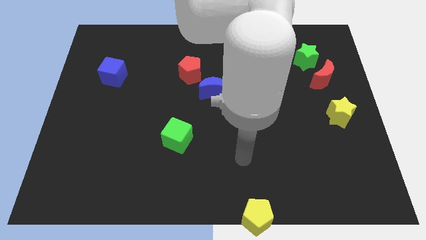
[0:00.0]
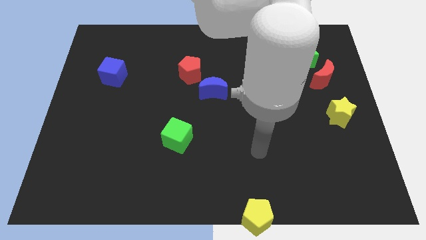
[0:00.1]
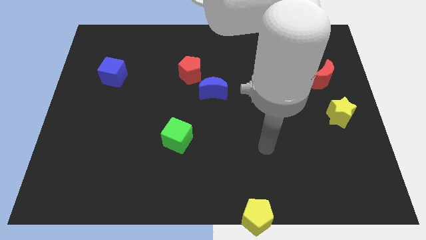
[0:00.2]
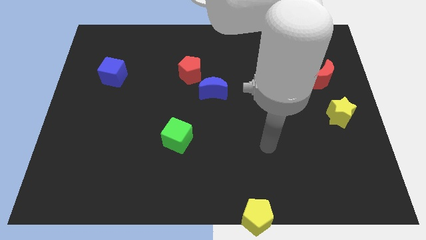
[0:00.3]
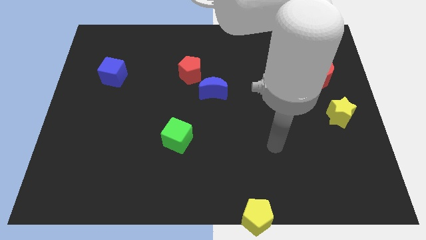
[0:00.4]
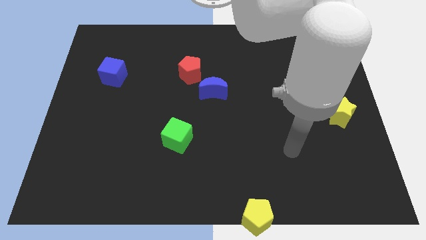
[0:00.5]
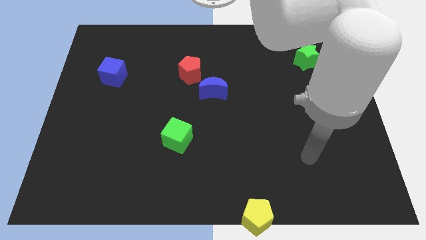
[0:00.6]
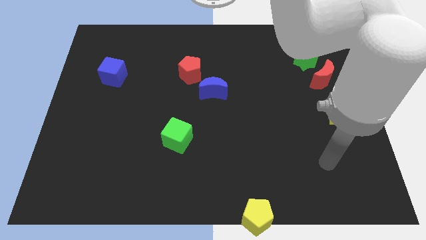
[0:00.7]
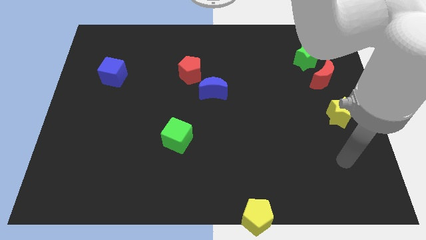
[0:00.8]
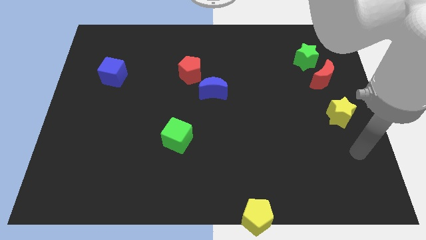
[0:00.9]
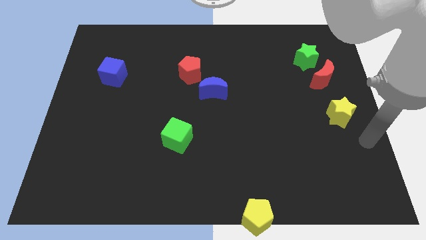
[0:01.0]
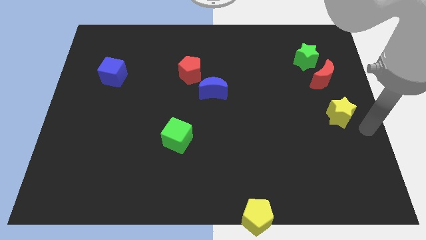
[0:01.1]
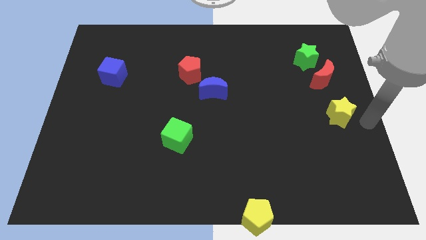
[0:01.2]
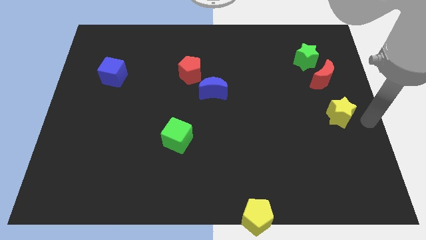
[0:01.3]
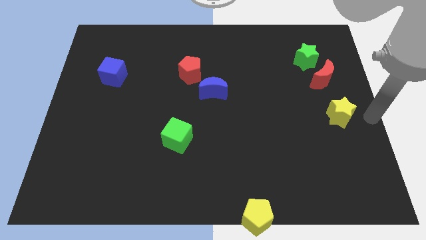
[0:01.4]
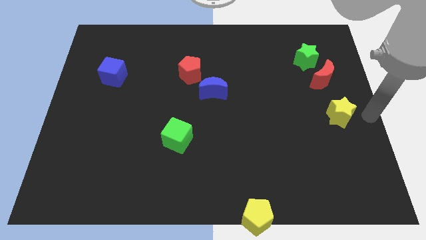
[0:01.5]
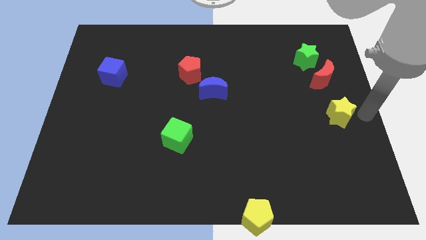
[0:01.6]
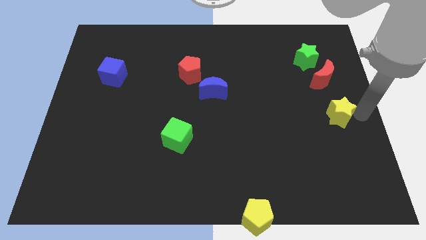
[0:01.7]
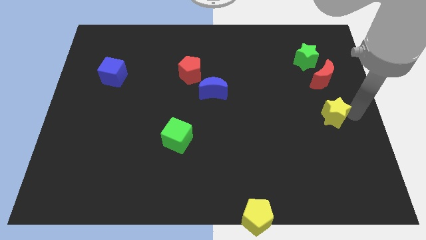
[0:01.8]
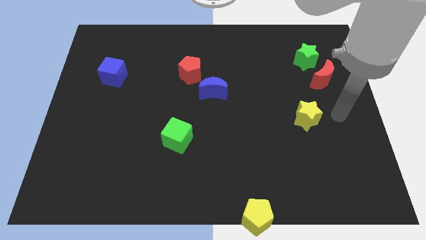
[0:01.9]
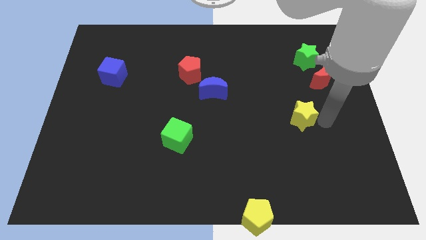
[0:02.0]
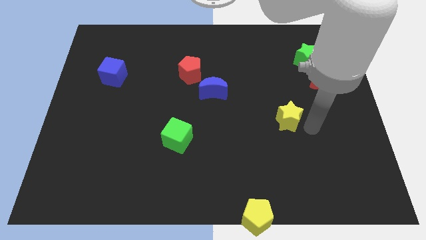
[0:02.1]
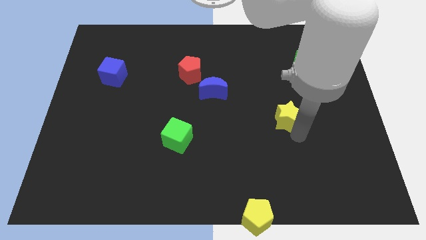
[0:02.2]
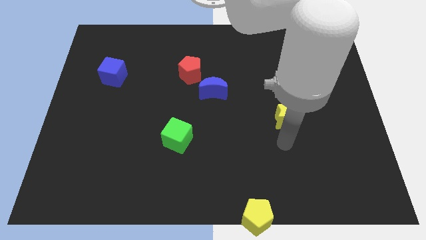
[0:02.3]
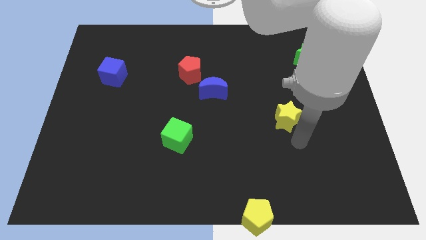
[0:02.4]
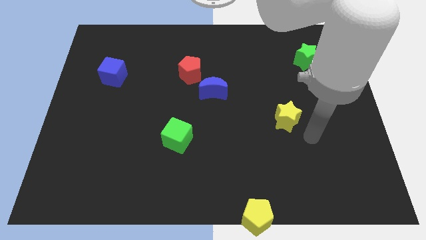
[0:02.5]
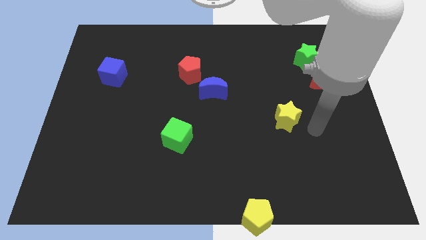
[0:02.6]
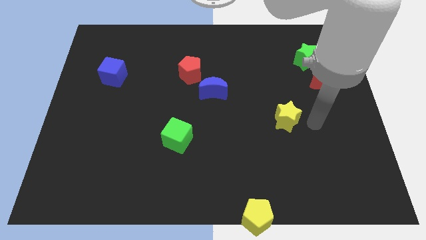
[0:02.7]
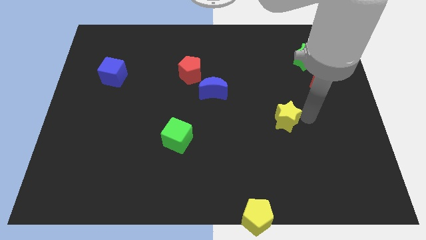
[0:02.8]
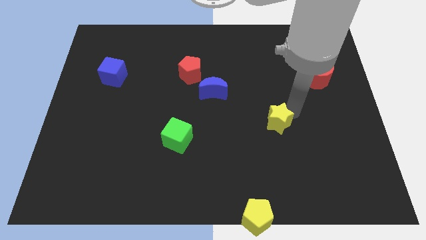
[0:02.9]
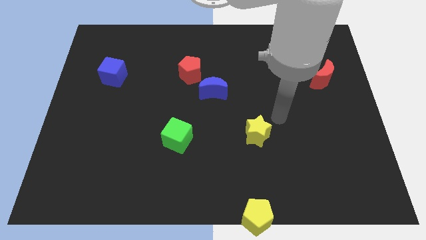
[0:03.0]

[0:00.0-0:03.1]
place yellow star to the right of green cube

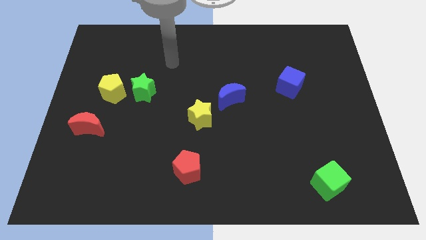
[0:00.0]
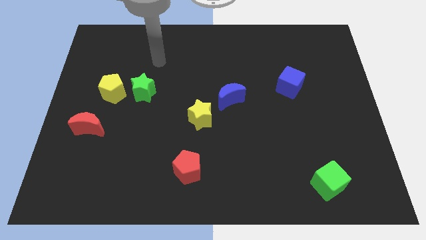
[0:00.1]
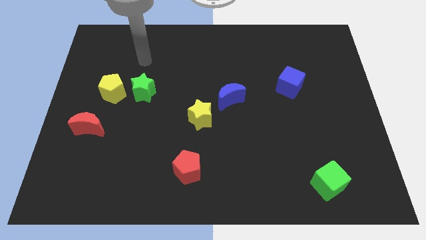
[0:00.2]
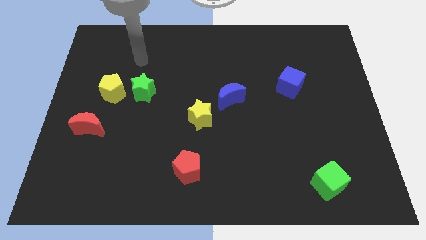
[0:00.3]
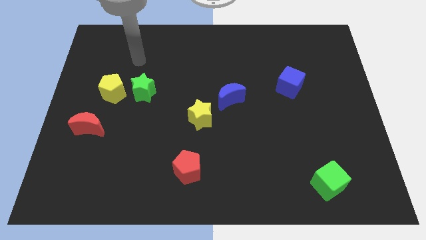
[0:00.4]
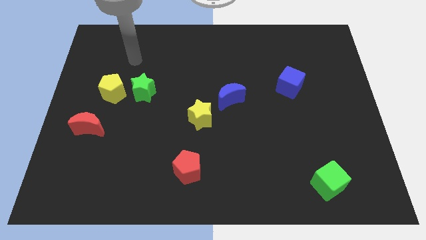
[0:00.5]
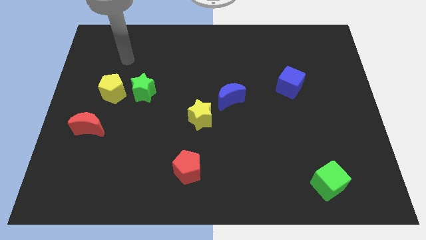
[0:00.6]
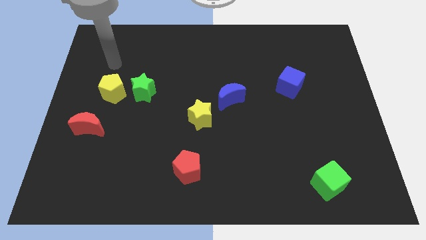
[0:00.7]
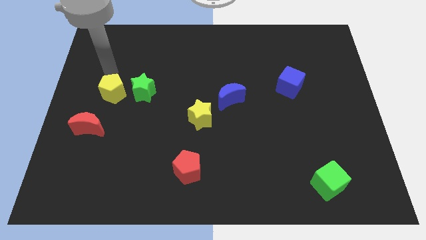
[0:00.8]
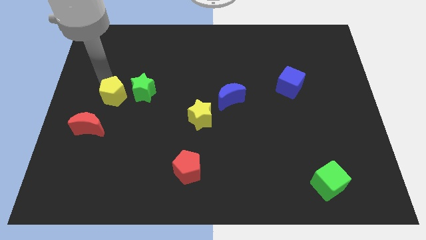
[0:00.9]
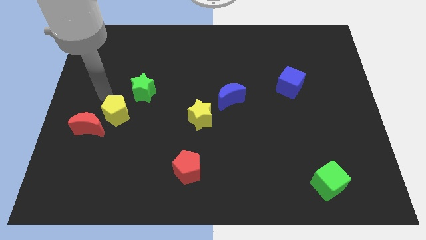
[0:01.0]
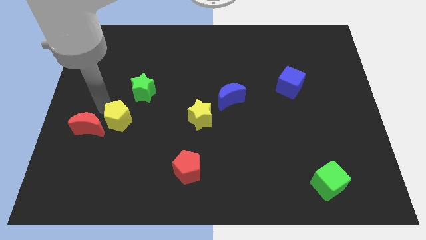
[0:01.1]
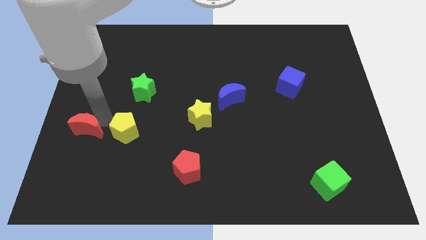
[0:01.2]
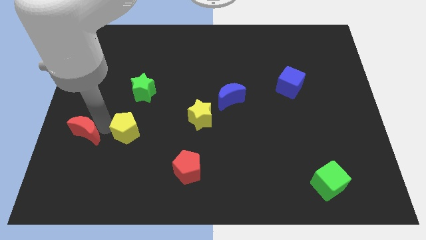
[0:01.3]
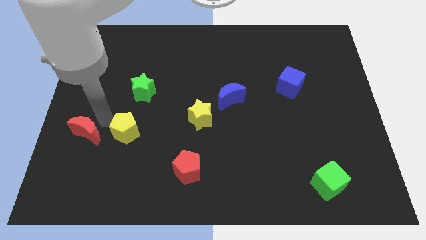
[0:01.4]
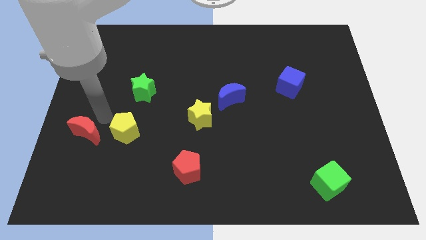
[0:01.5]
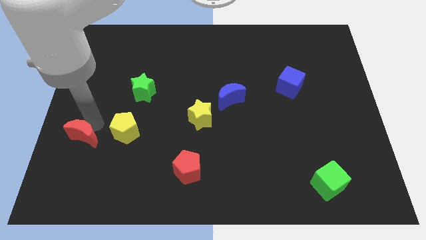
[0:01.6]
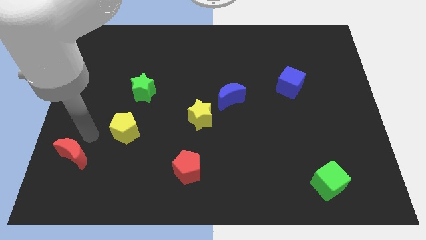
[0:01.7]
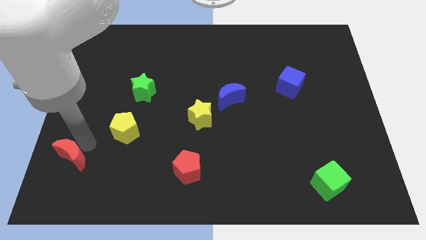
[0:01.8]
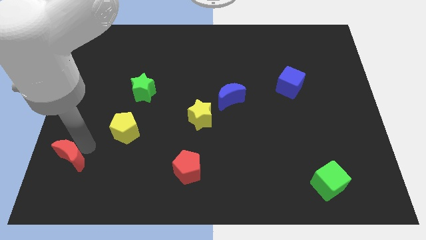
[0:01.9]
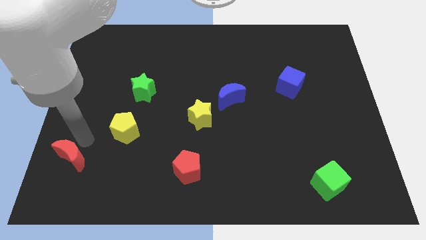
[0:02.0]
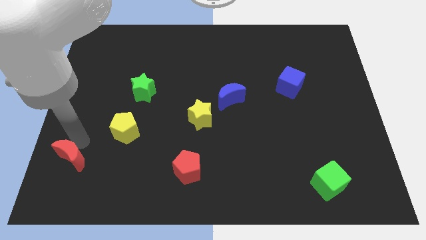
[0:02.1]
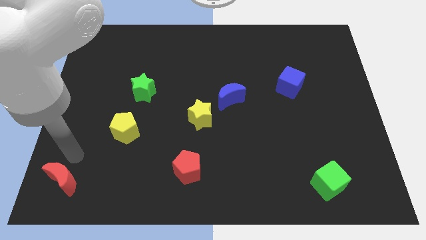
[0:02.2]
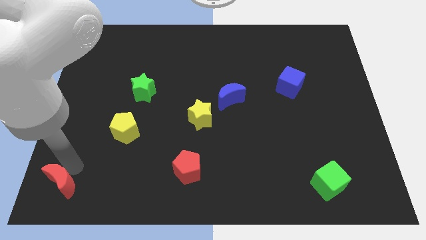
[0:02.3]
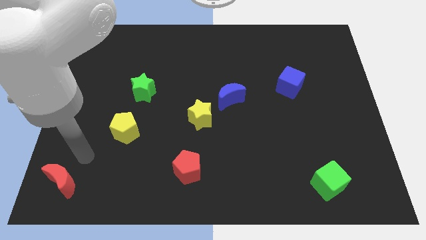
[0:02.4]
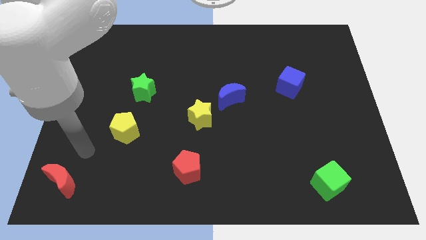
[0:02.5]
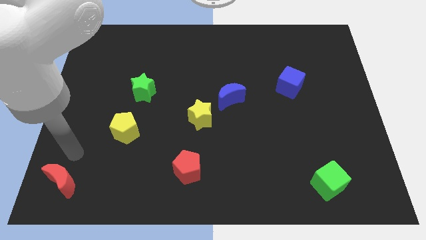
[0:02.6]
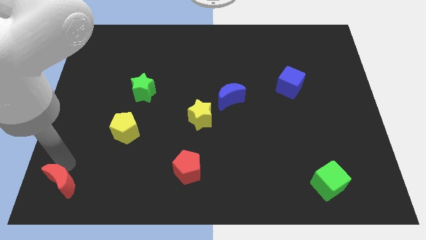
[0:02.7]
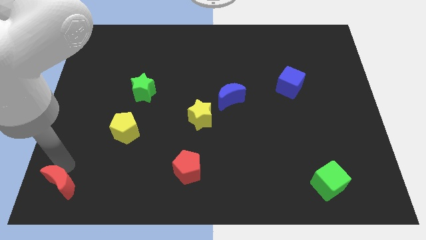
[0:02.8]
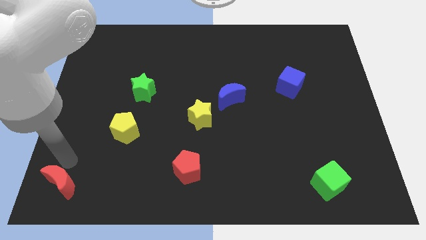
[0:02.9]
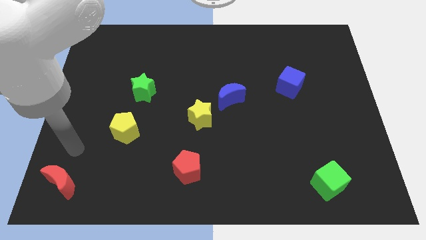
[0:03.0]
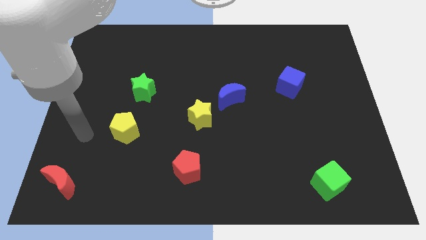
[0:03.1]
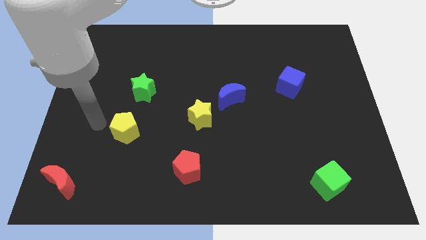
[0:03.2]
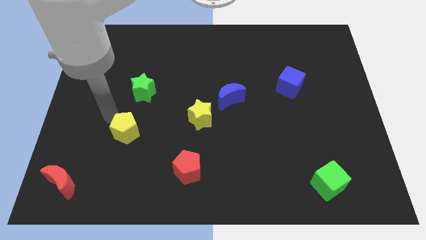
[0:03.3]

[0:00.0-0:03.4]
push red moon to the bottom left of the board

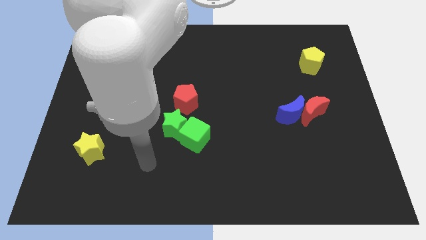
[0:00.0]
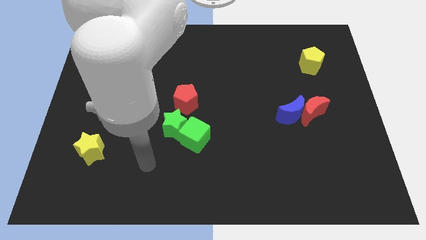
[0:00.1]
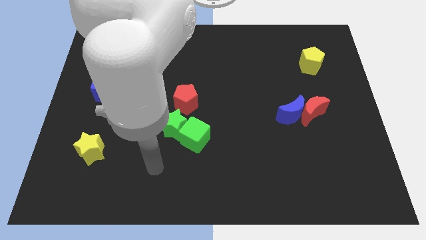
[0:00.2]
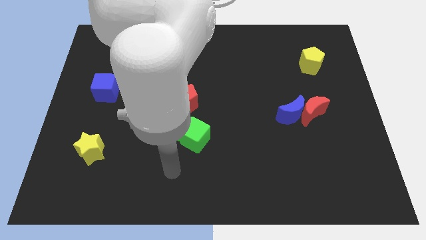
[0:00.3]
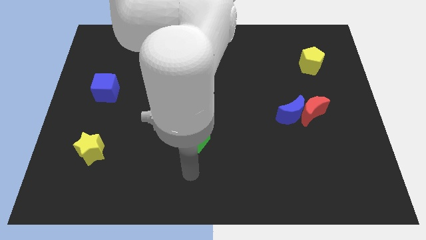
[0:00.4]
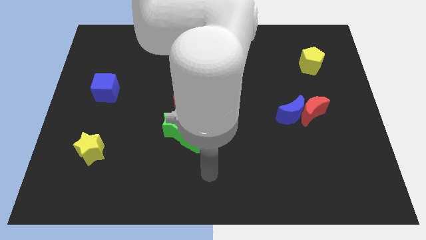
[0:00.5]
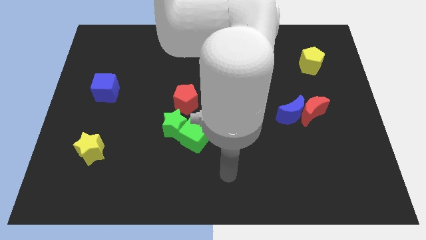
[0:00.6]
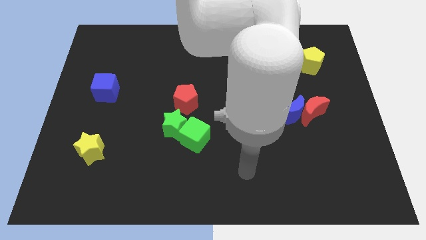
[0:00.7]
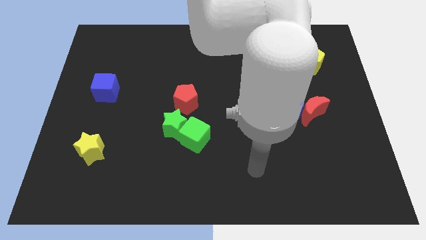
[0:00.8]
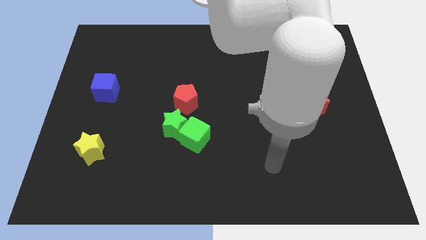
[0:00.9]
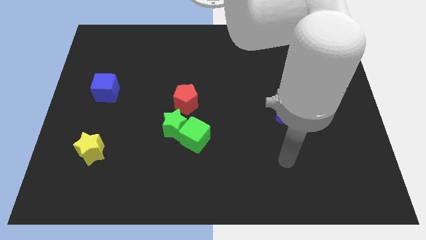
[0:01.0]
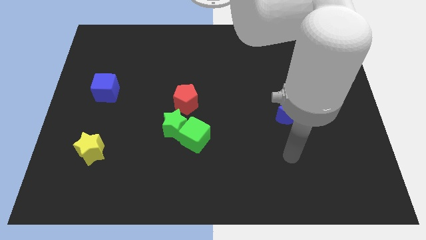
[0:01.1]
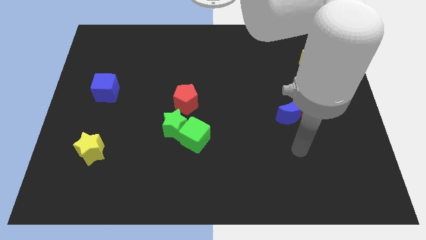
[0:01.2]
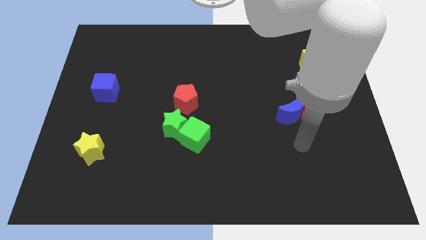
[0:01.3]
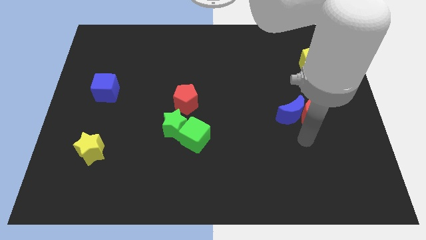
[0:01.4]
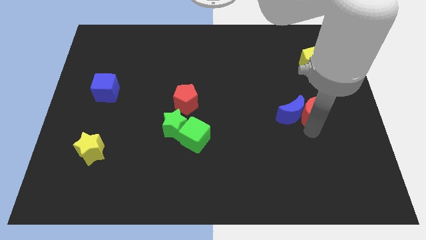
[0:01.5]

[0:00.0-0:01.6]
place the arm below the red moon

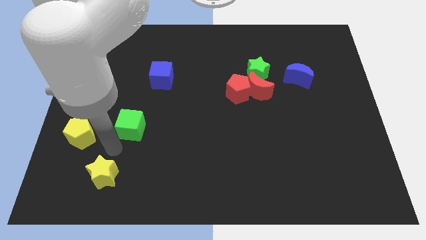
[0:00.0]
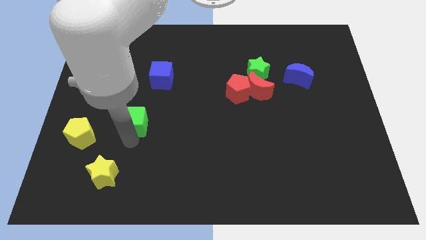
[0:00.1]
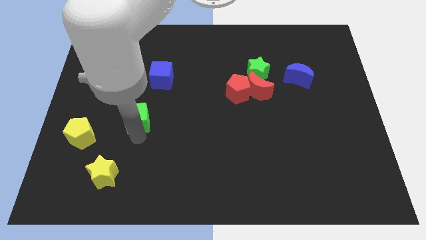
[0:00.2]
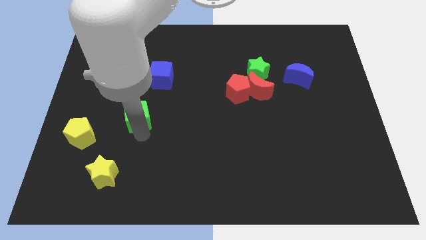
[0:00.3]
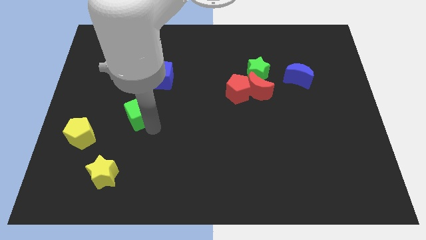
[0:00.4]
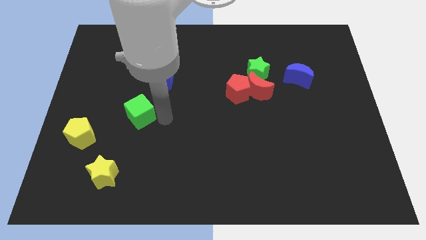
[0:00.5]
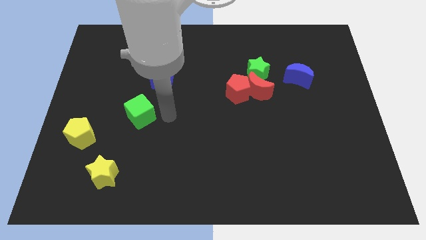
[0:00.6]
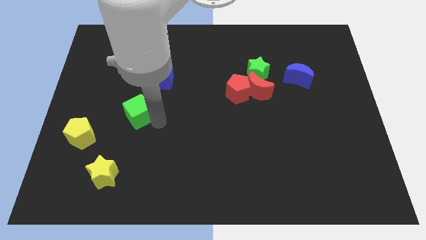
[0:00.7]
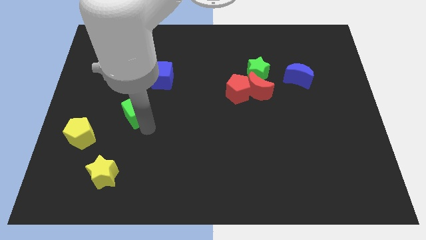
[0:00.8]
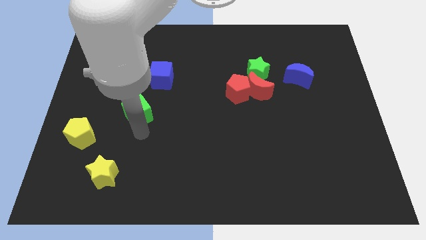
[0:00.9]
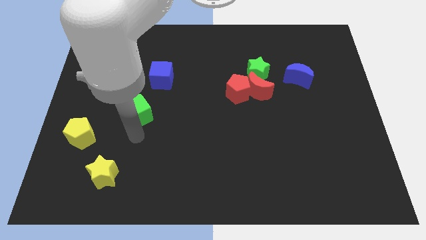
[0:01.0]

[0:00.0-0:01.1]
push green cube towards blue cube
